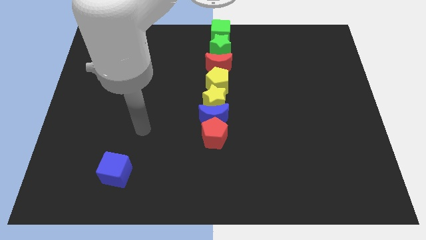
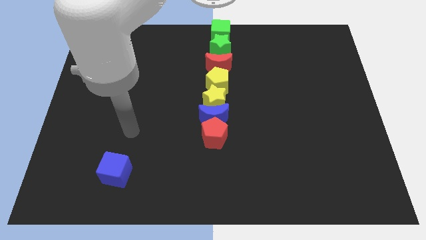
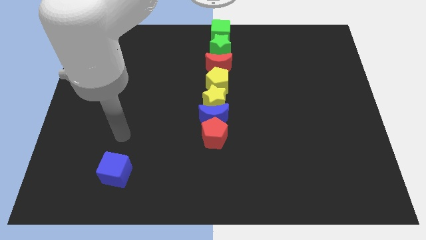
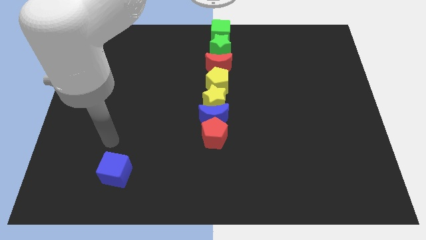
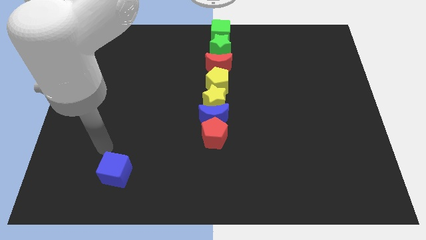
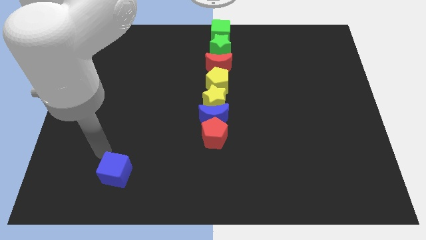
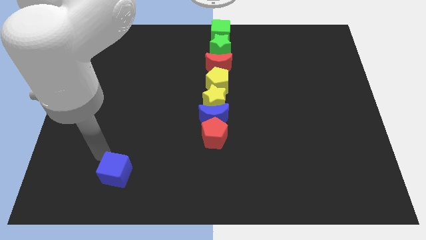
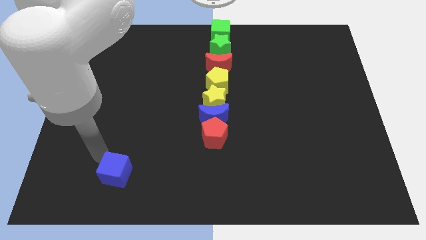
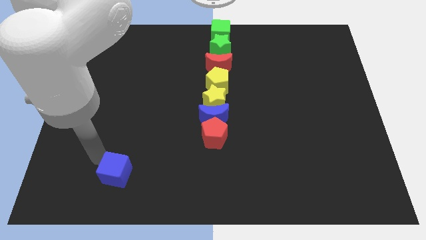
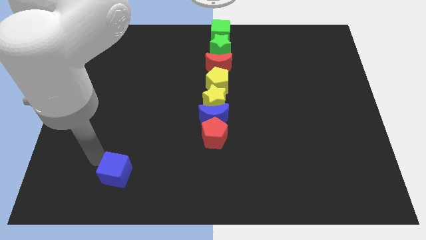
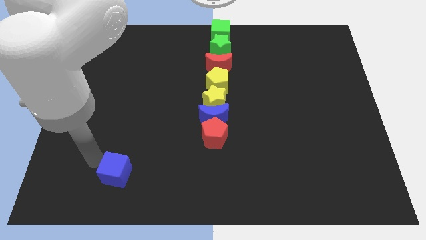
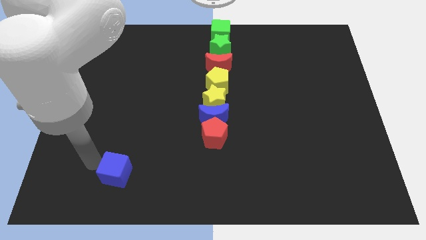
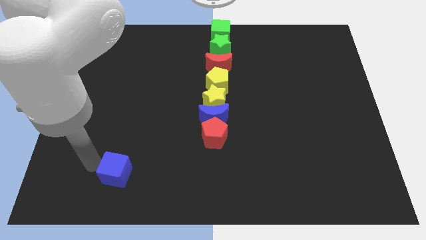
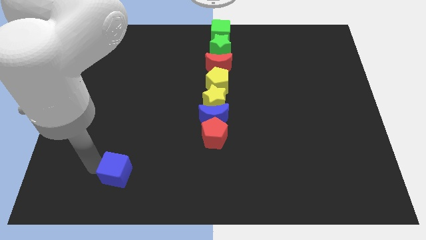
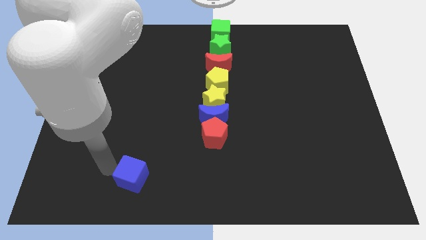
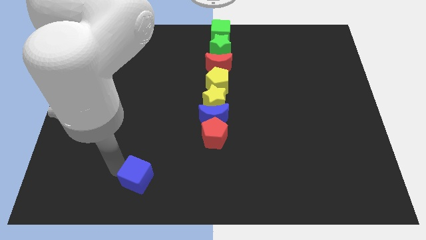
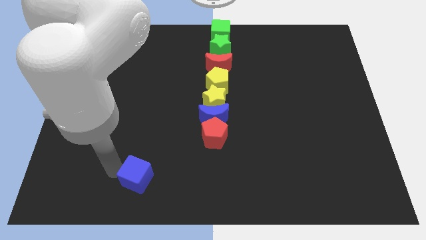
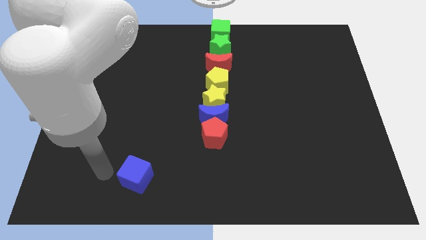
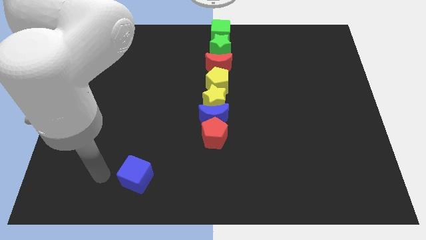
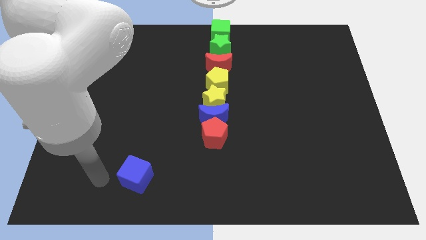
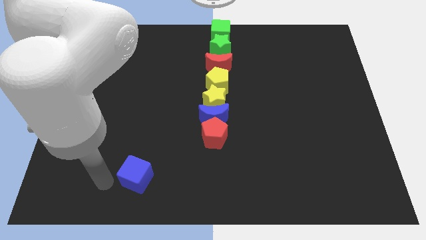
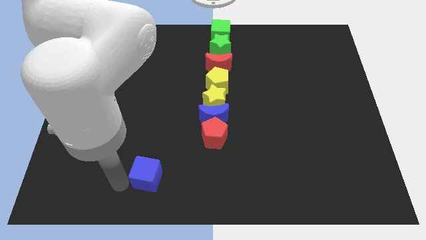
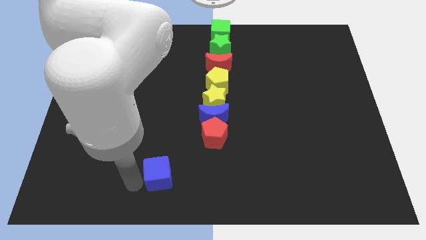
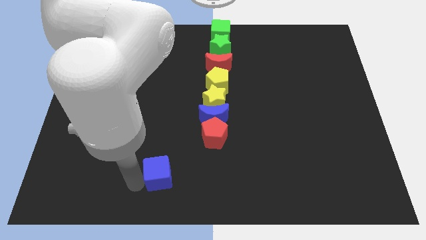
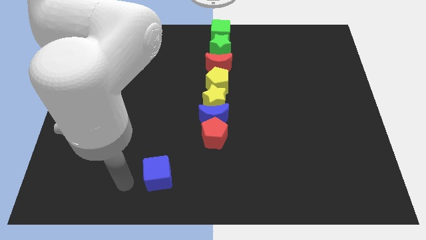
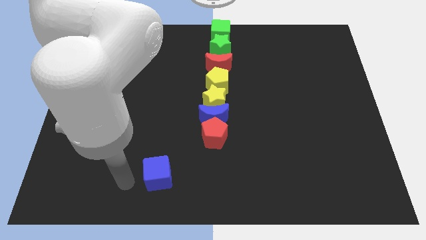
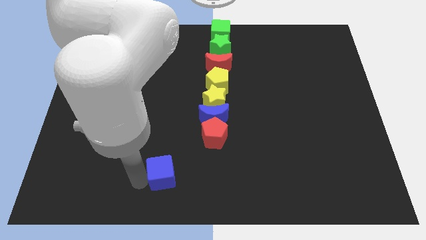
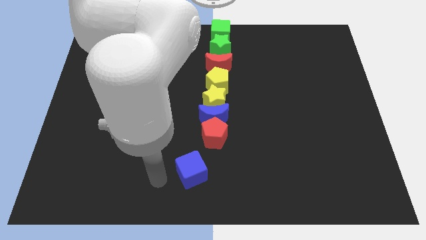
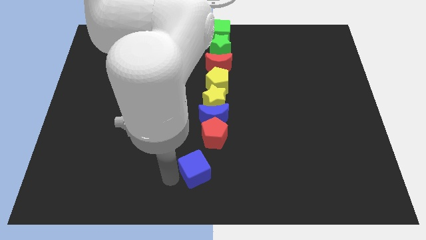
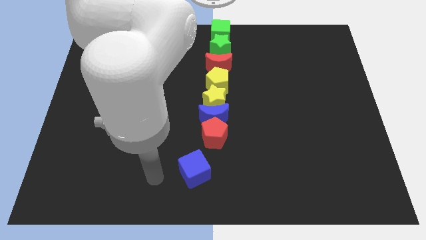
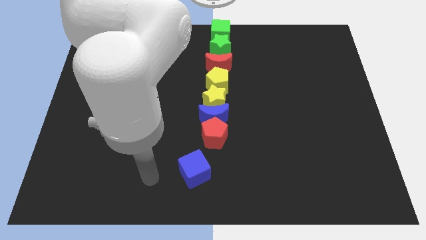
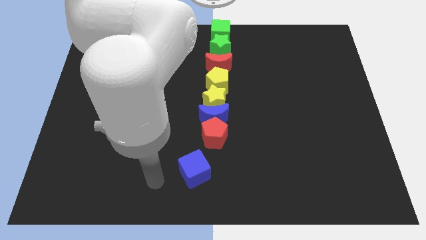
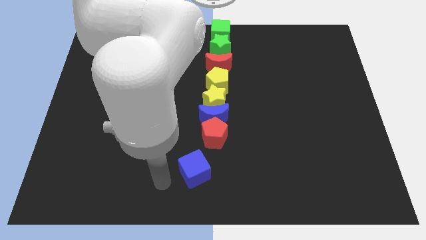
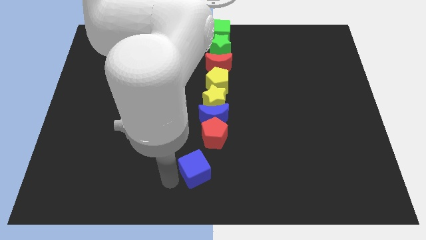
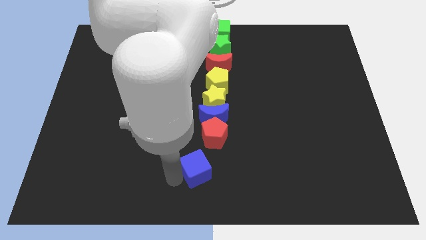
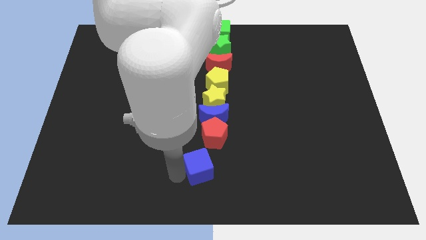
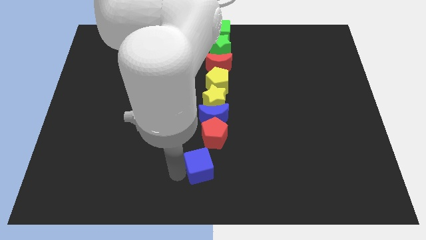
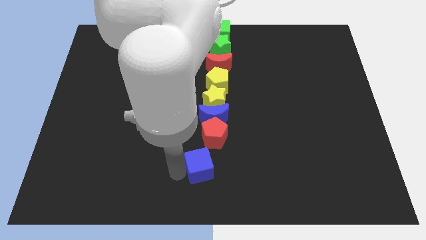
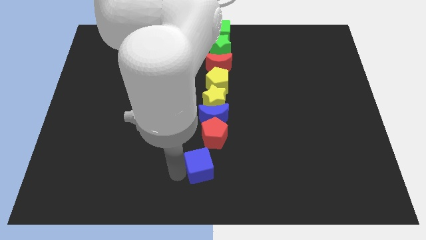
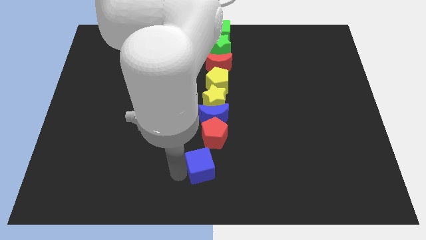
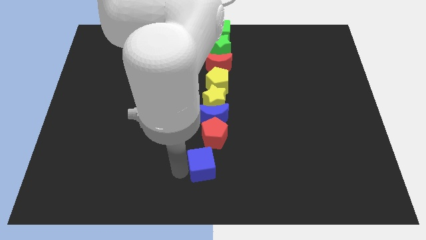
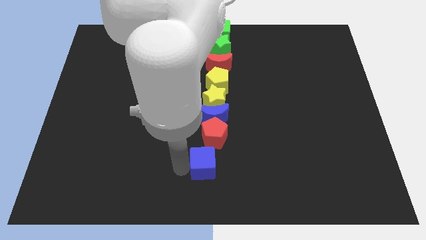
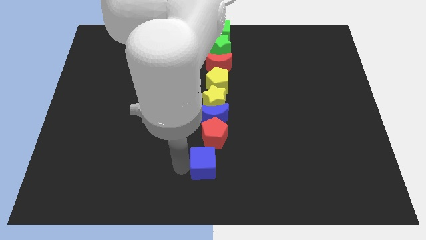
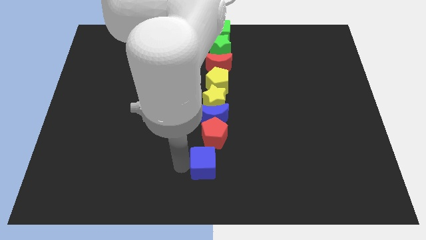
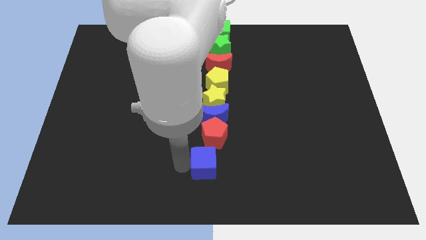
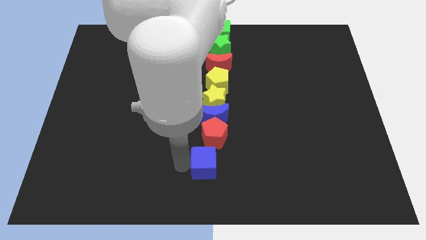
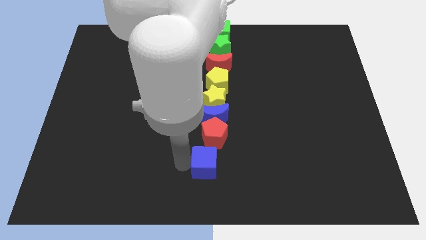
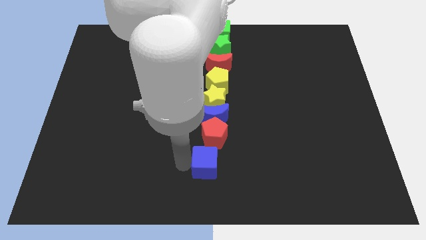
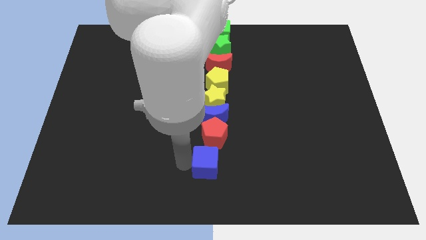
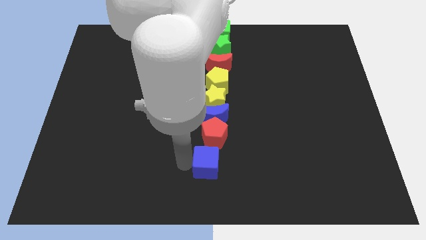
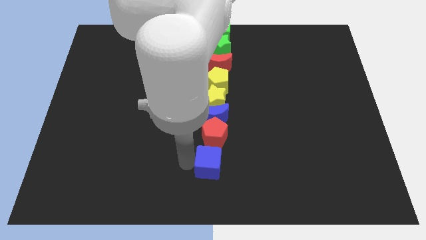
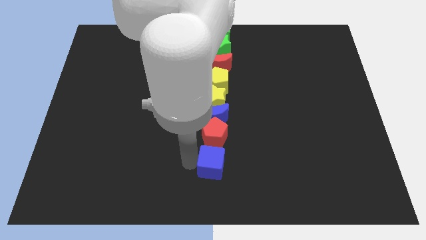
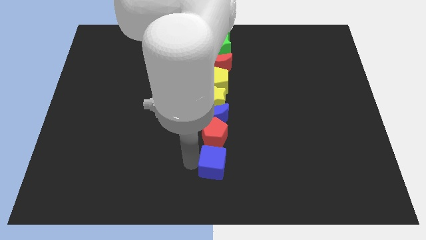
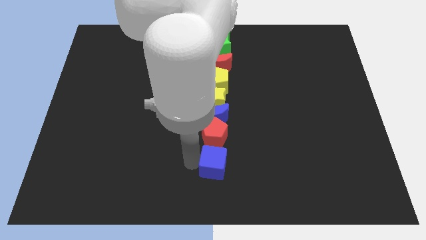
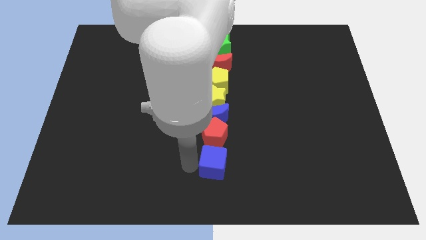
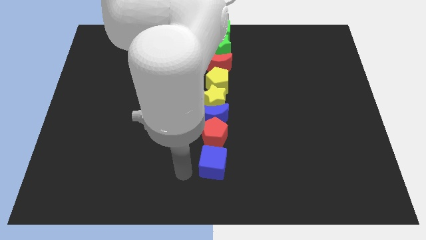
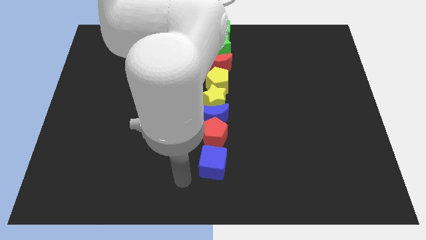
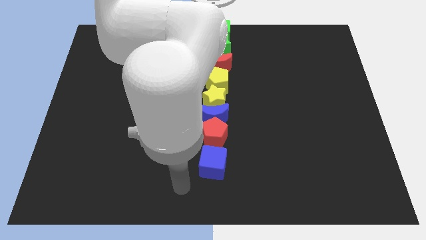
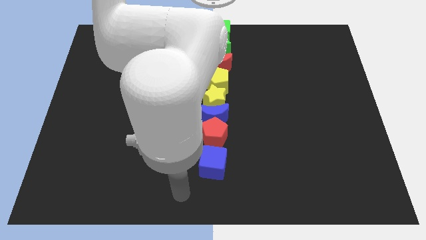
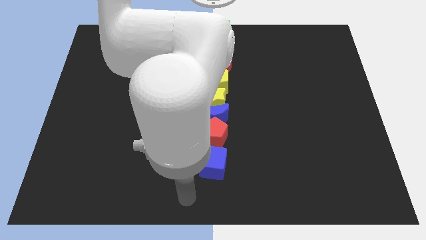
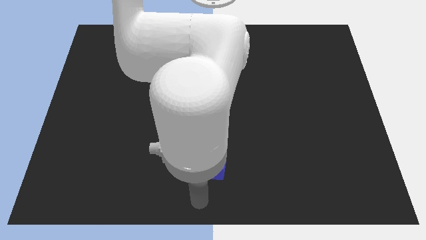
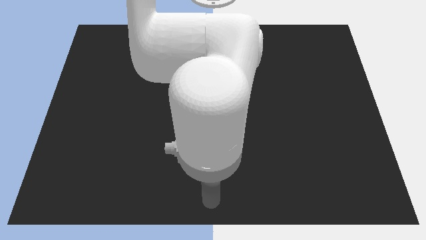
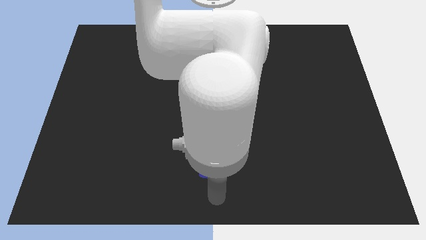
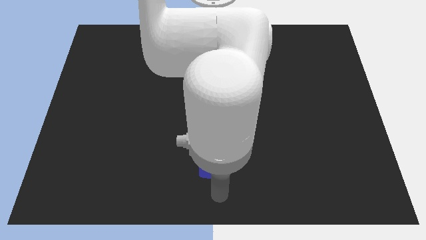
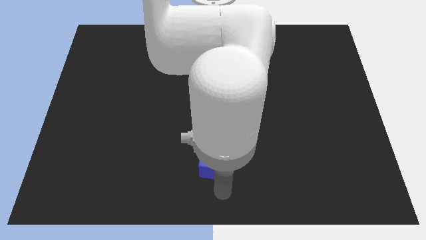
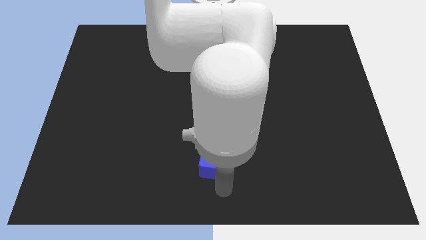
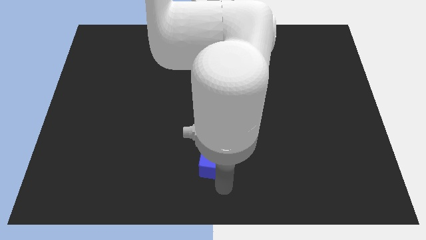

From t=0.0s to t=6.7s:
push the blue cube below the group of blocks to form a vertical line

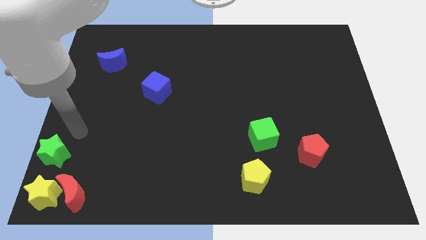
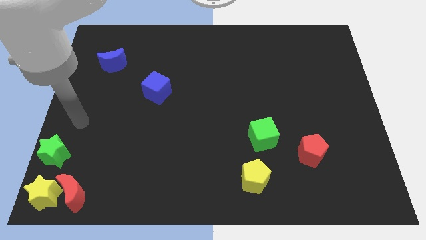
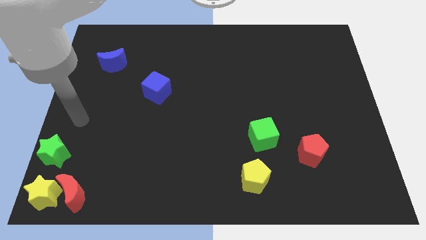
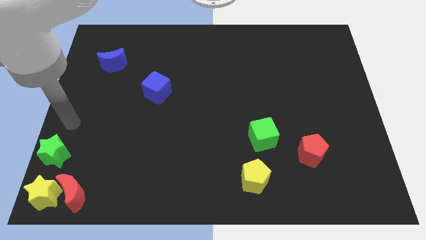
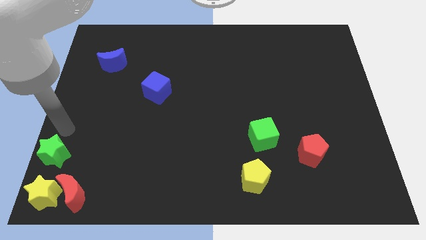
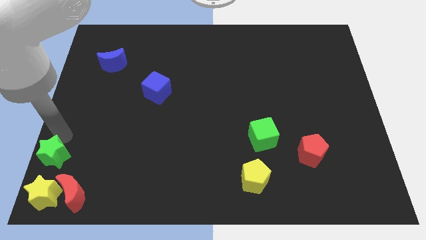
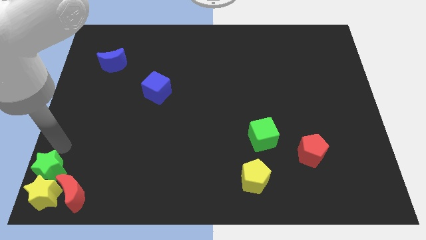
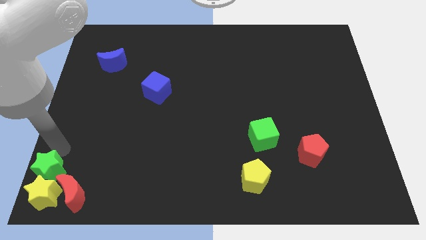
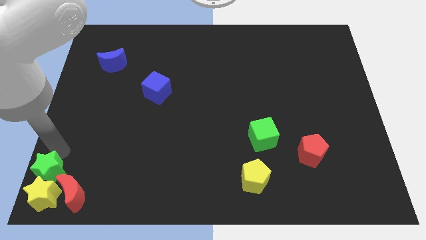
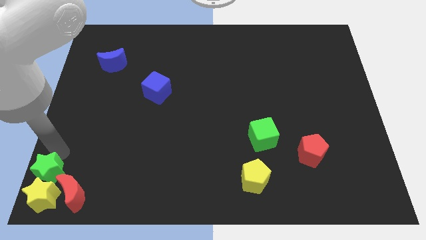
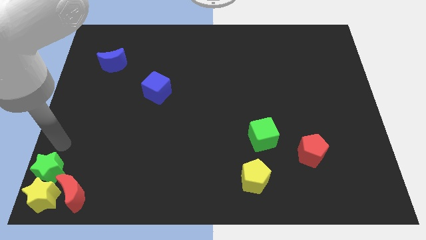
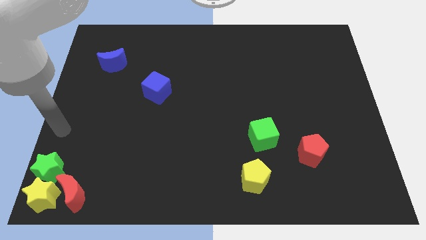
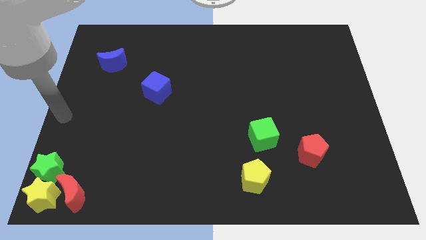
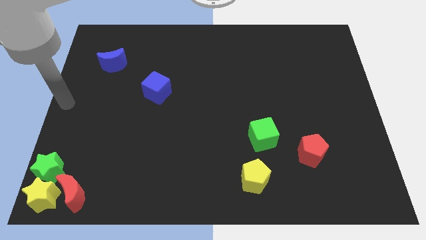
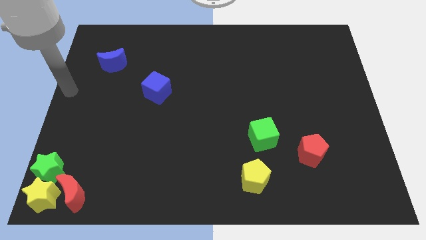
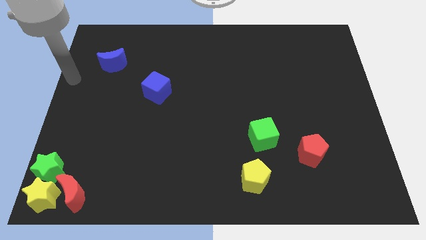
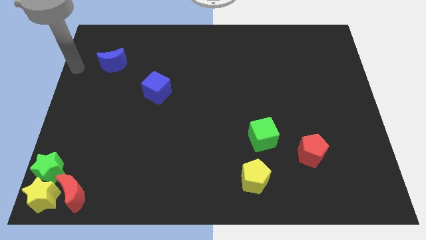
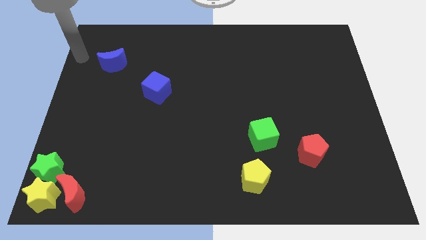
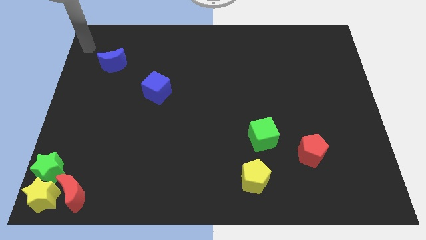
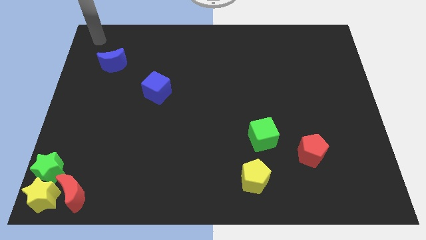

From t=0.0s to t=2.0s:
put the green star into the yellow star
